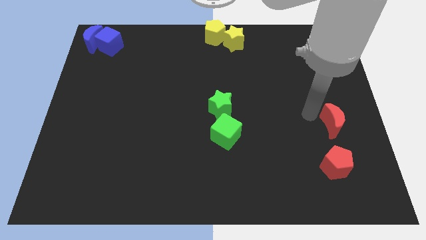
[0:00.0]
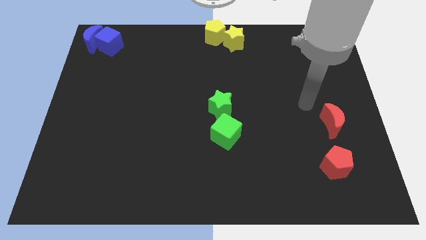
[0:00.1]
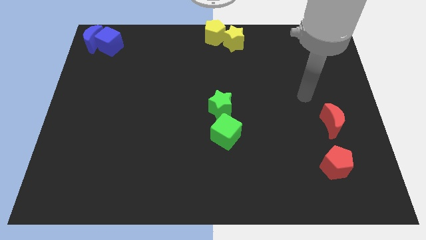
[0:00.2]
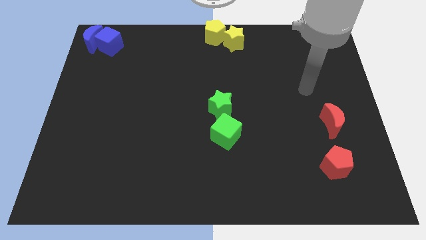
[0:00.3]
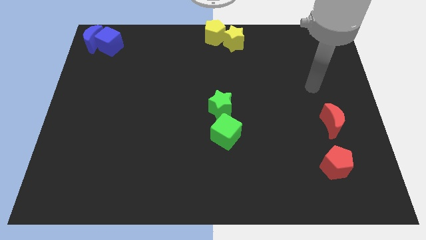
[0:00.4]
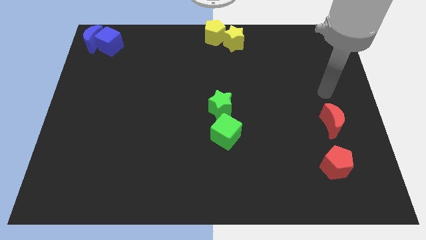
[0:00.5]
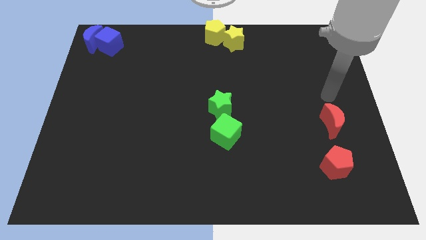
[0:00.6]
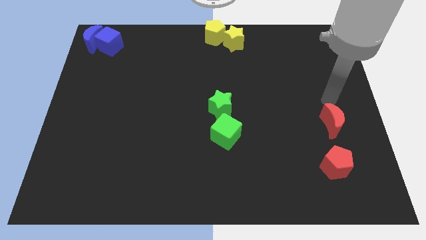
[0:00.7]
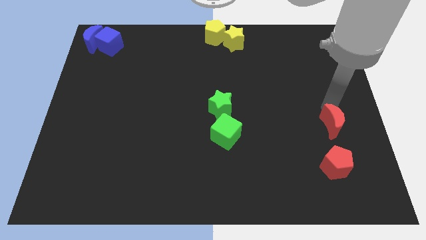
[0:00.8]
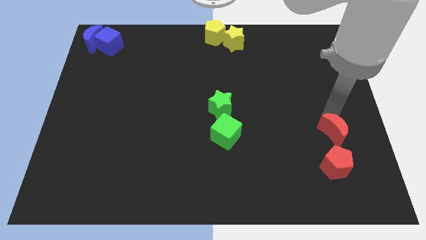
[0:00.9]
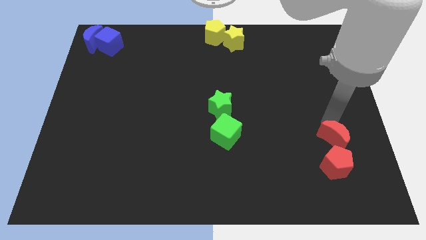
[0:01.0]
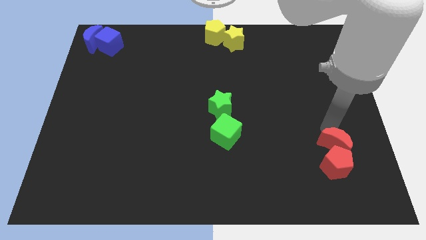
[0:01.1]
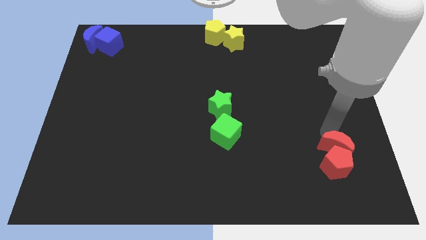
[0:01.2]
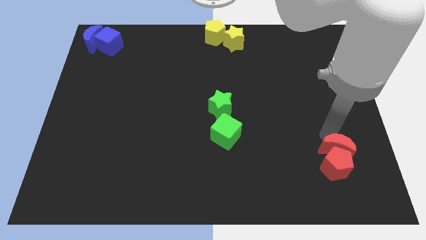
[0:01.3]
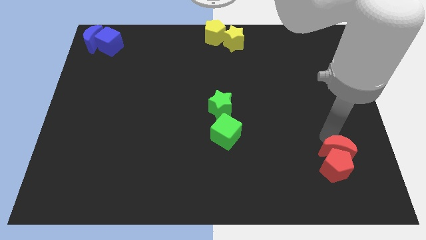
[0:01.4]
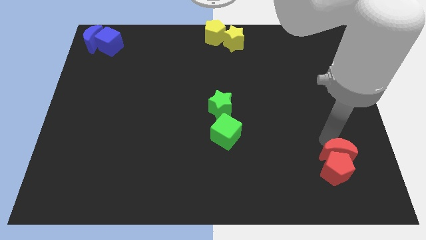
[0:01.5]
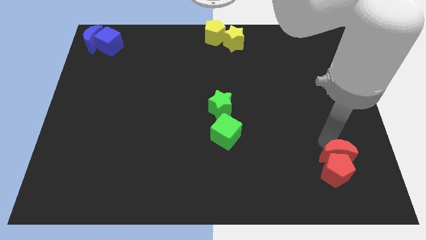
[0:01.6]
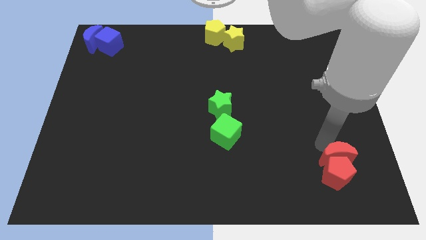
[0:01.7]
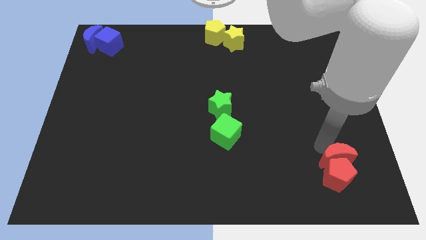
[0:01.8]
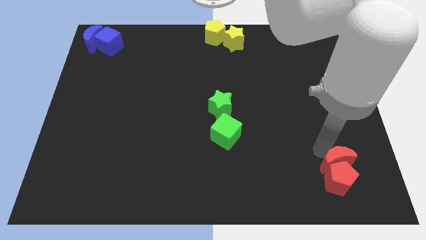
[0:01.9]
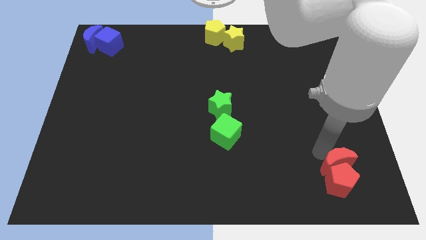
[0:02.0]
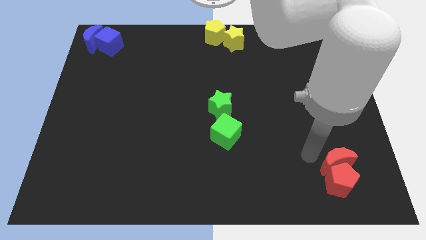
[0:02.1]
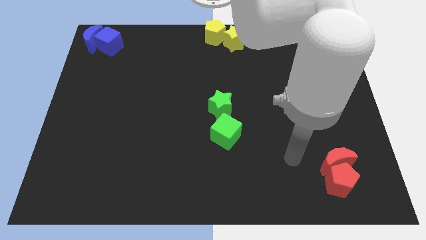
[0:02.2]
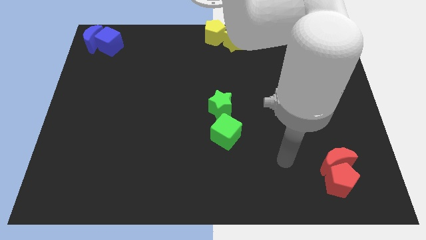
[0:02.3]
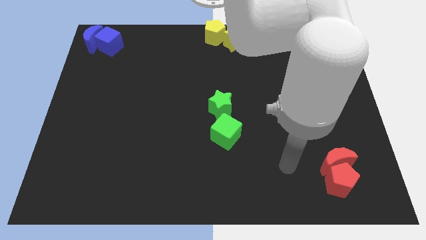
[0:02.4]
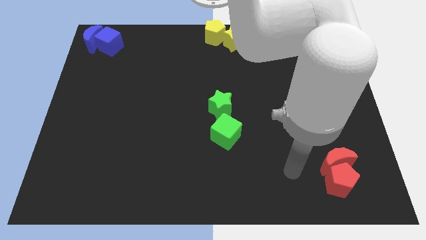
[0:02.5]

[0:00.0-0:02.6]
push the red moon to the bottom right

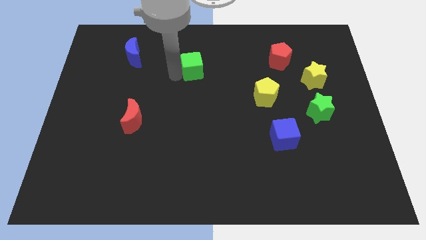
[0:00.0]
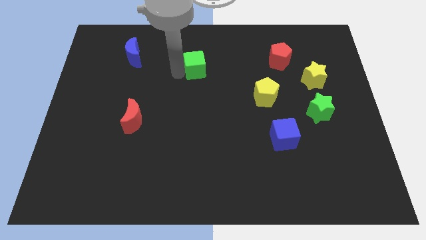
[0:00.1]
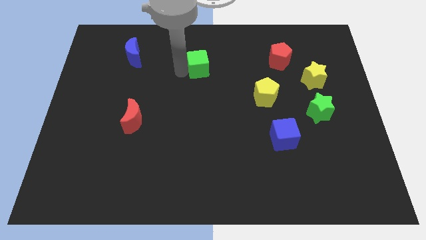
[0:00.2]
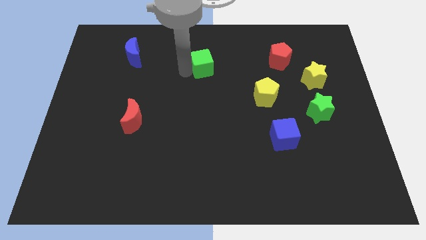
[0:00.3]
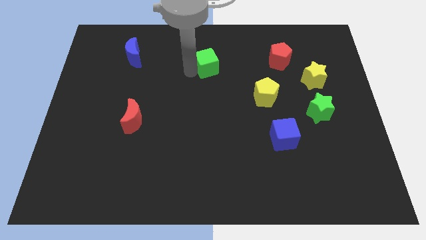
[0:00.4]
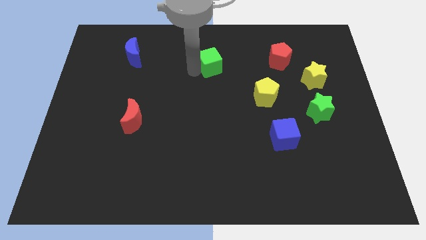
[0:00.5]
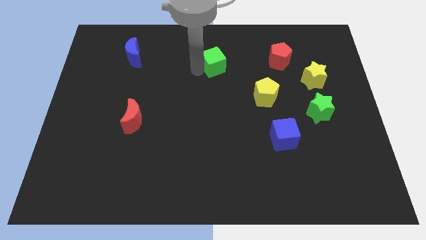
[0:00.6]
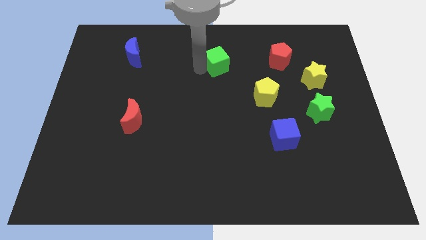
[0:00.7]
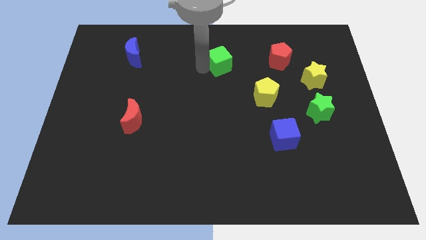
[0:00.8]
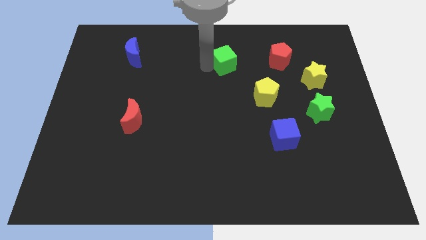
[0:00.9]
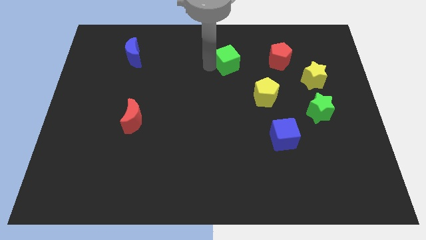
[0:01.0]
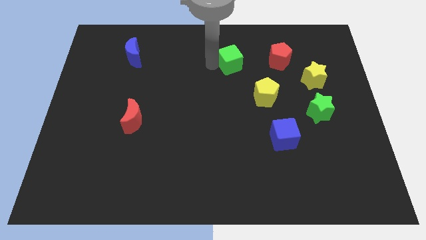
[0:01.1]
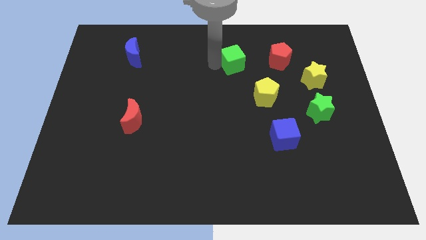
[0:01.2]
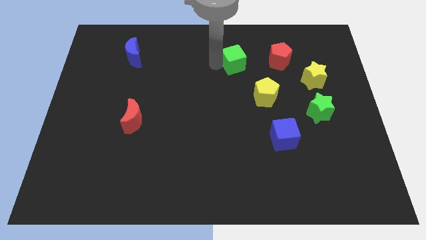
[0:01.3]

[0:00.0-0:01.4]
push the green cube to the right of the board

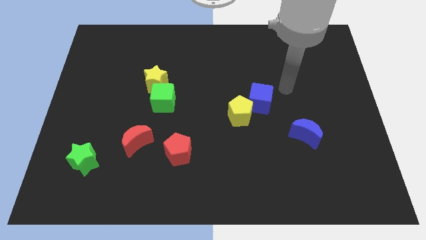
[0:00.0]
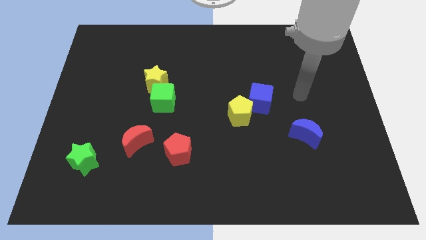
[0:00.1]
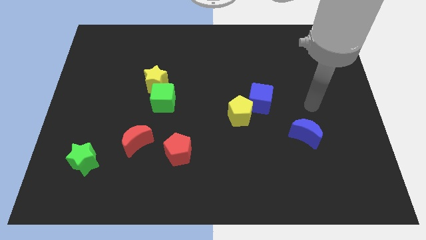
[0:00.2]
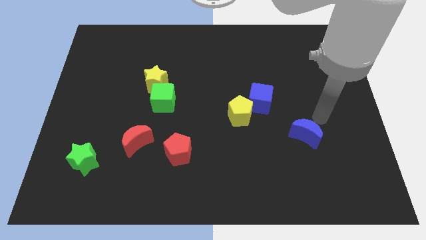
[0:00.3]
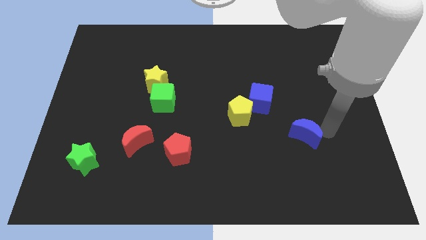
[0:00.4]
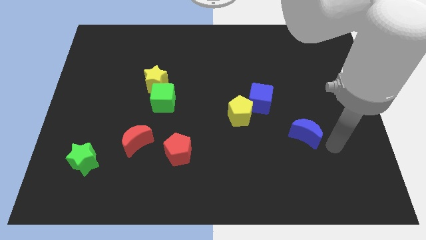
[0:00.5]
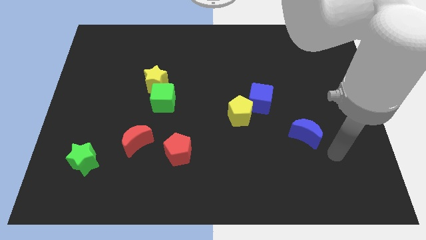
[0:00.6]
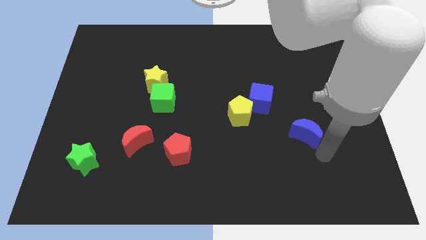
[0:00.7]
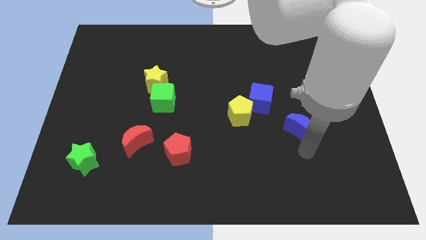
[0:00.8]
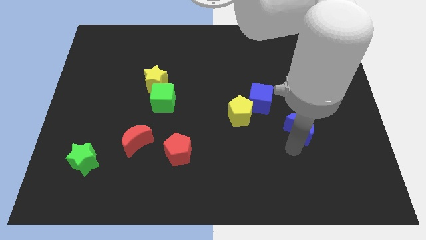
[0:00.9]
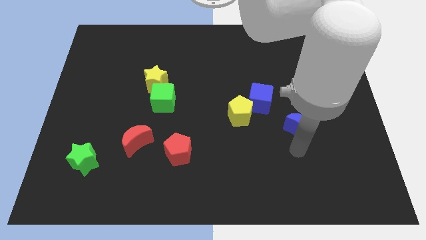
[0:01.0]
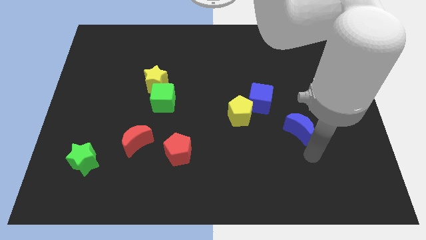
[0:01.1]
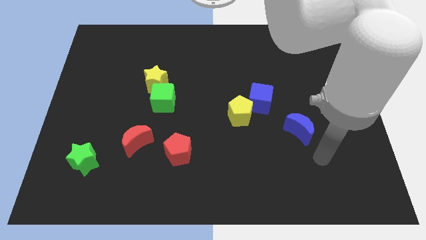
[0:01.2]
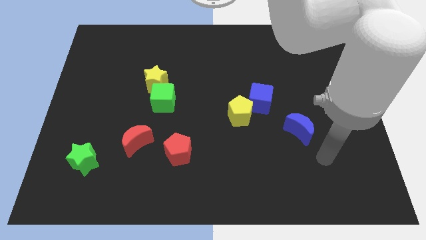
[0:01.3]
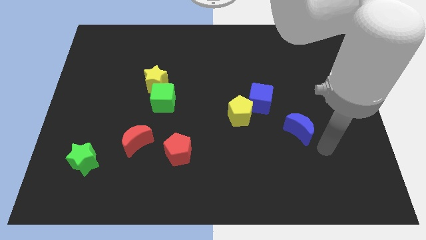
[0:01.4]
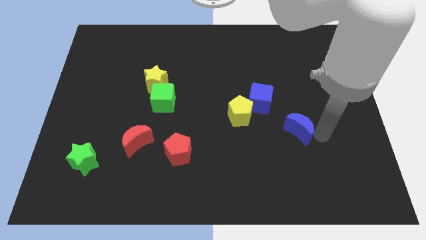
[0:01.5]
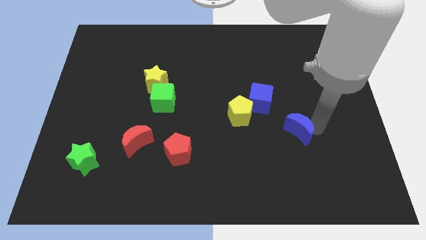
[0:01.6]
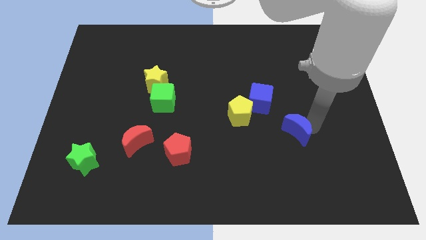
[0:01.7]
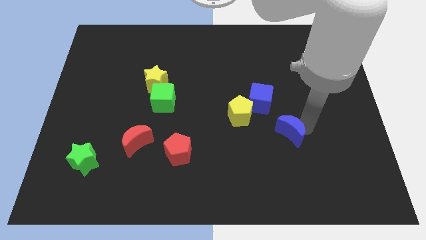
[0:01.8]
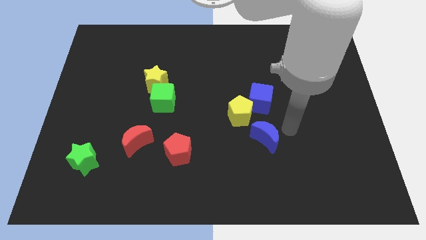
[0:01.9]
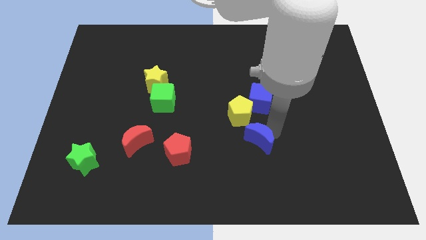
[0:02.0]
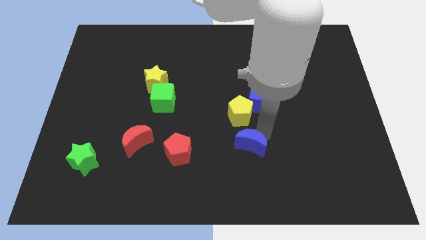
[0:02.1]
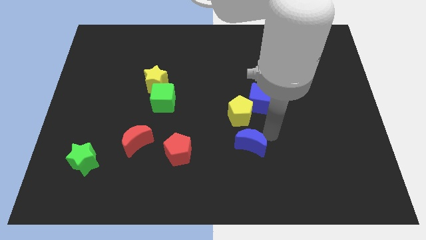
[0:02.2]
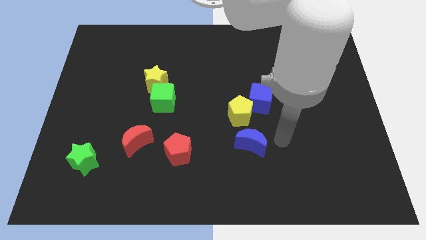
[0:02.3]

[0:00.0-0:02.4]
put the blue crescent below to the blue cube

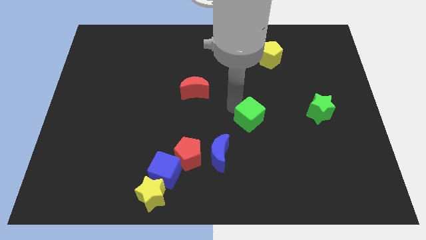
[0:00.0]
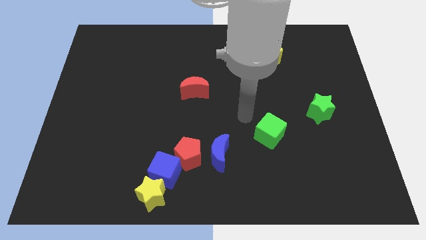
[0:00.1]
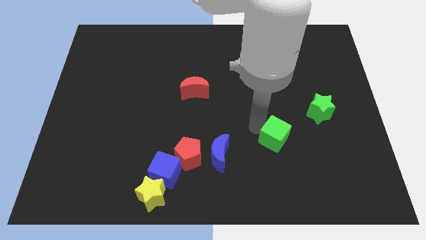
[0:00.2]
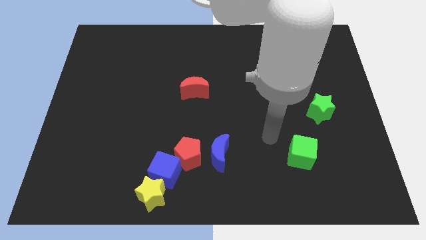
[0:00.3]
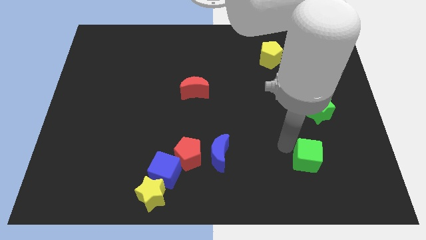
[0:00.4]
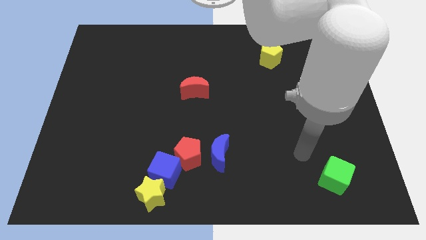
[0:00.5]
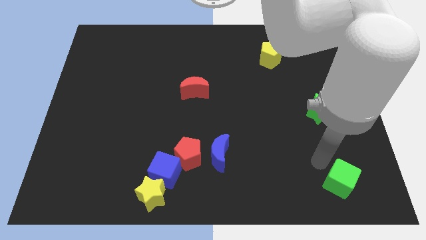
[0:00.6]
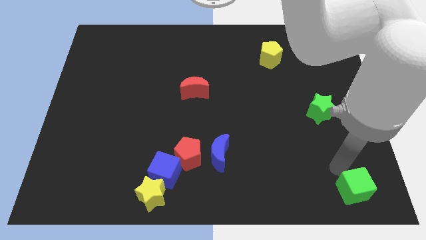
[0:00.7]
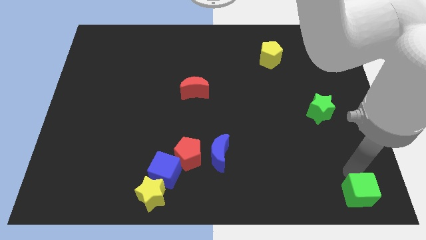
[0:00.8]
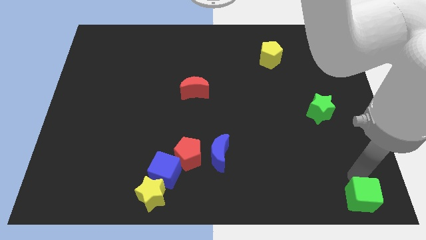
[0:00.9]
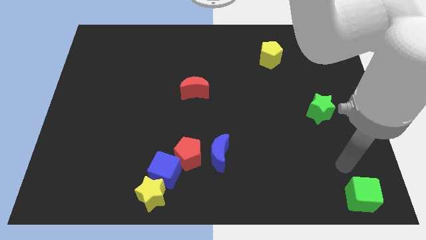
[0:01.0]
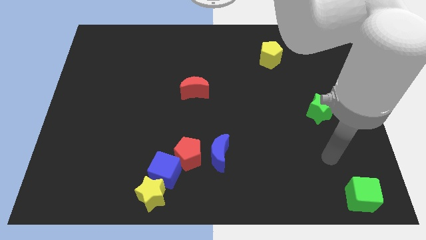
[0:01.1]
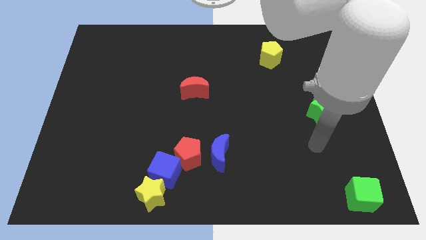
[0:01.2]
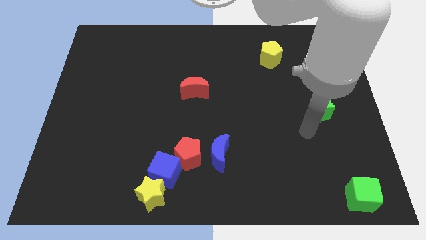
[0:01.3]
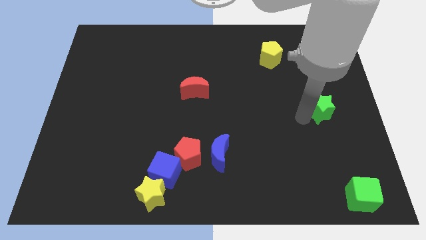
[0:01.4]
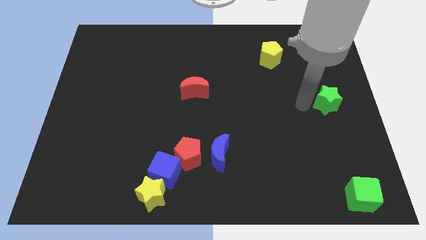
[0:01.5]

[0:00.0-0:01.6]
place green block to the bottom right of the board

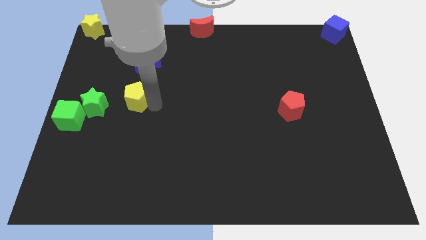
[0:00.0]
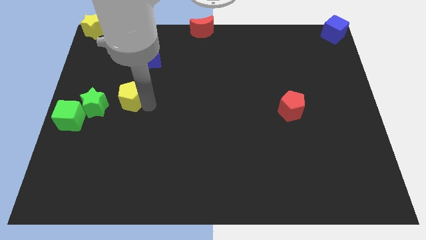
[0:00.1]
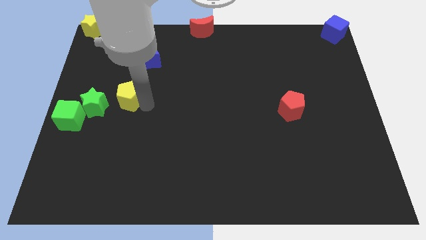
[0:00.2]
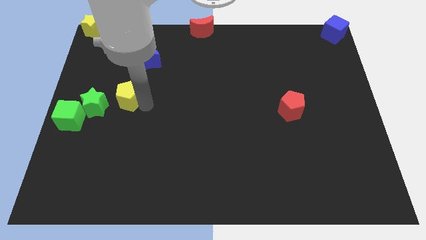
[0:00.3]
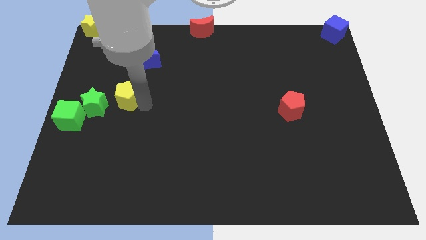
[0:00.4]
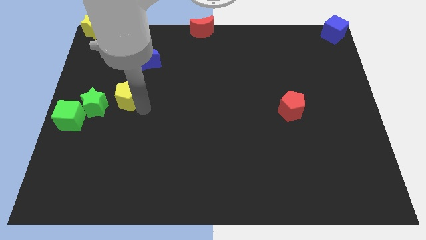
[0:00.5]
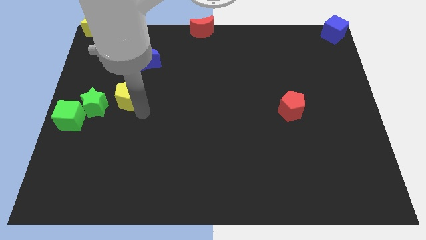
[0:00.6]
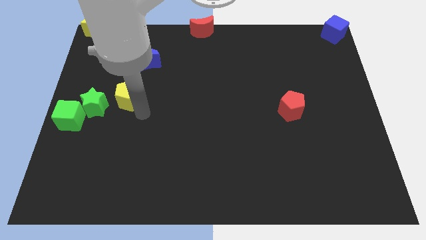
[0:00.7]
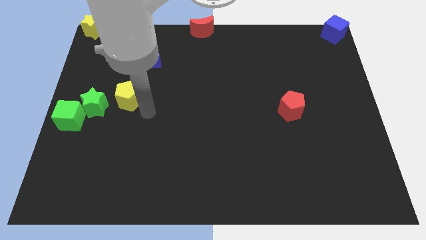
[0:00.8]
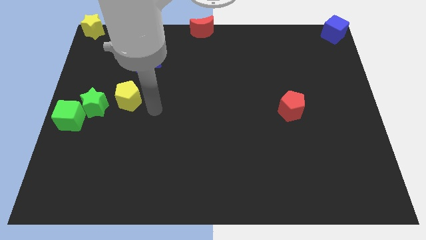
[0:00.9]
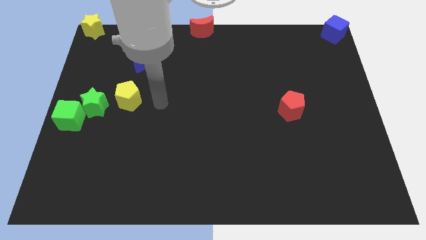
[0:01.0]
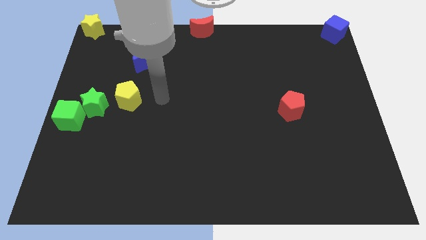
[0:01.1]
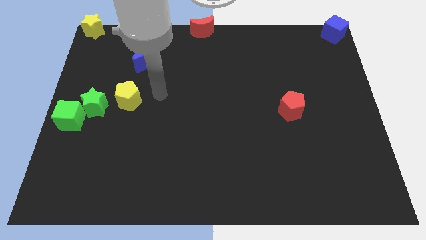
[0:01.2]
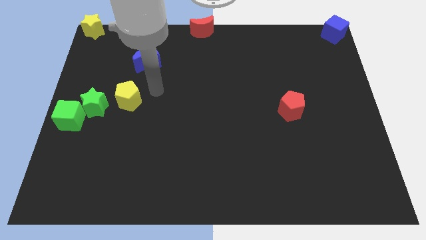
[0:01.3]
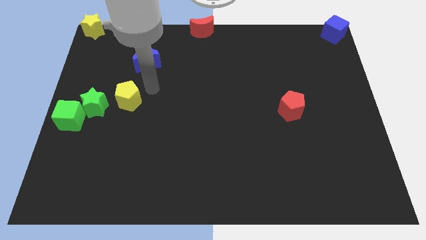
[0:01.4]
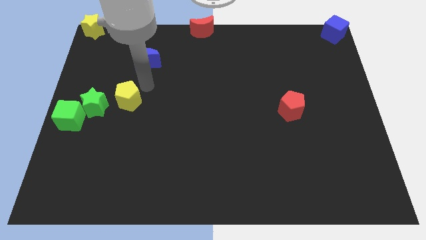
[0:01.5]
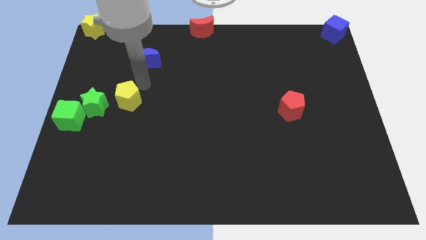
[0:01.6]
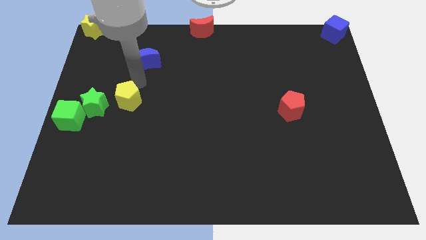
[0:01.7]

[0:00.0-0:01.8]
place the yellow pentagon diagonally top right to the green star
